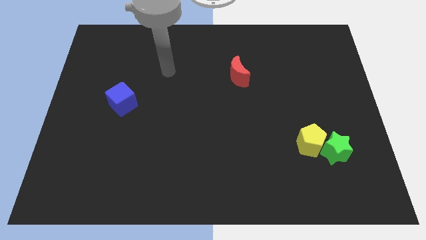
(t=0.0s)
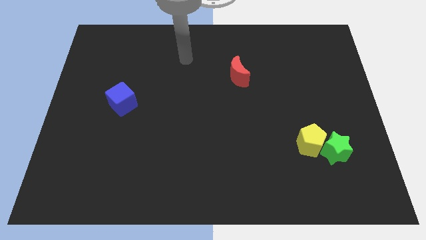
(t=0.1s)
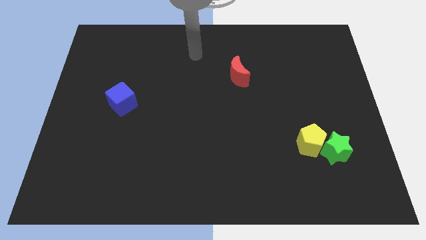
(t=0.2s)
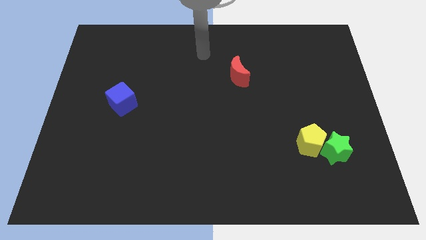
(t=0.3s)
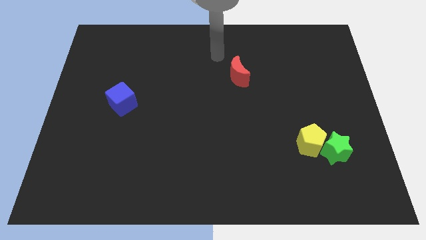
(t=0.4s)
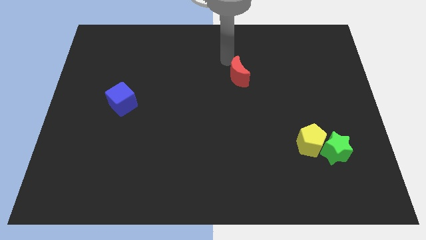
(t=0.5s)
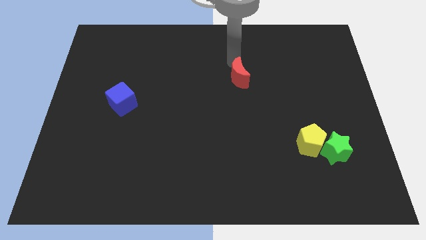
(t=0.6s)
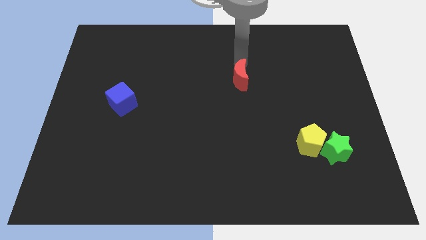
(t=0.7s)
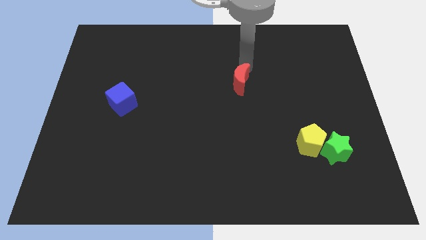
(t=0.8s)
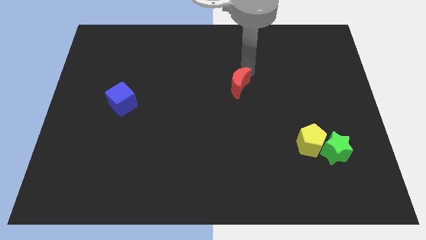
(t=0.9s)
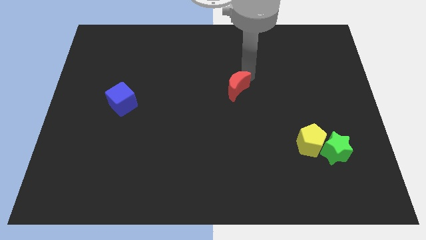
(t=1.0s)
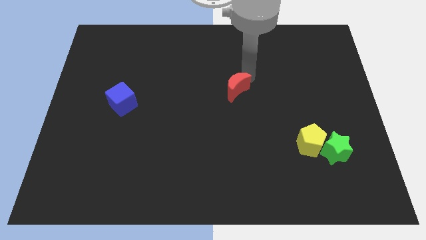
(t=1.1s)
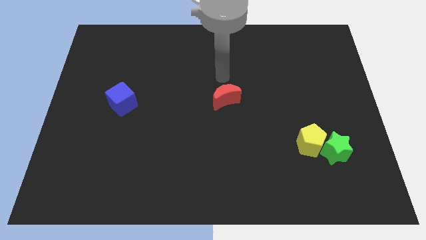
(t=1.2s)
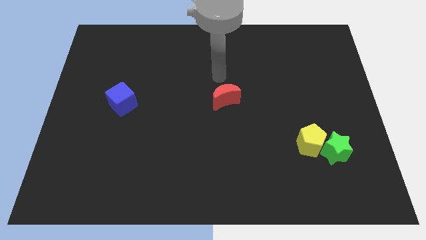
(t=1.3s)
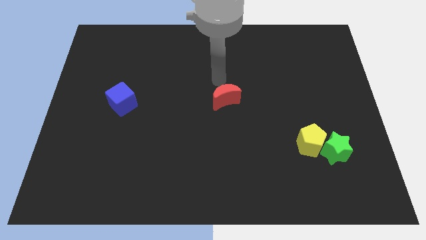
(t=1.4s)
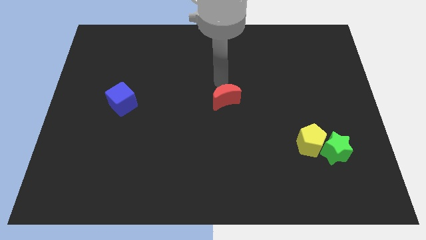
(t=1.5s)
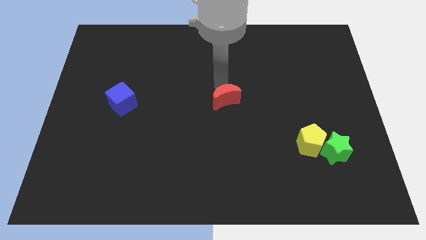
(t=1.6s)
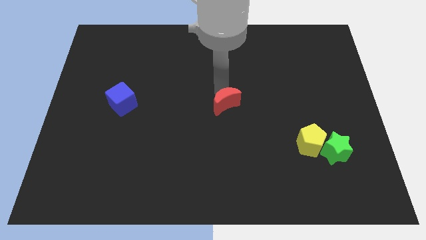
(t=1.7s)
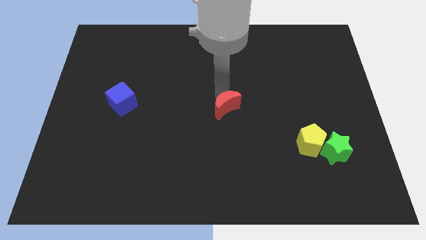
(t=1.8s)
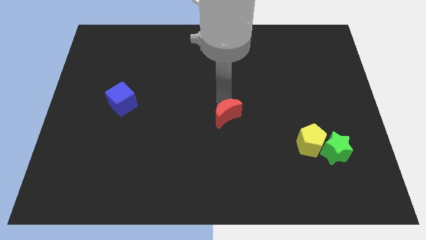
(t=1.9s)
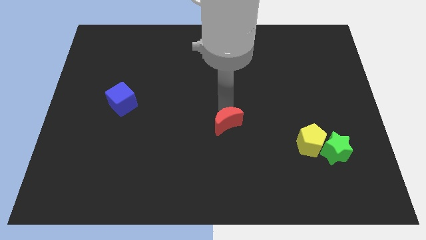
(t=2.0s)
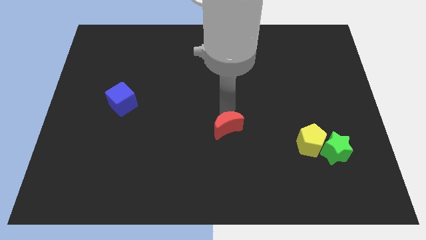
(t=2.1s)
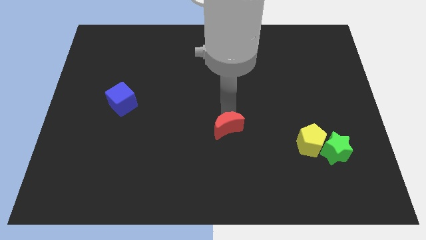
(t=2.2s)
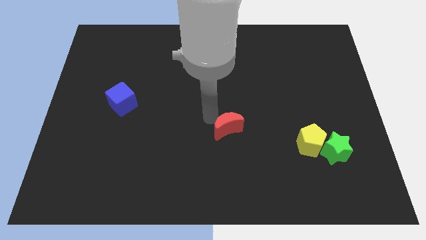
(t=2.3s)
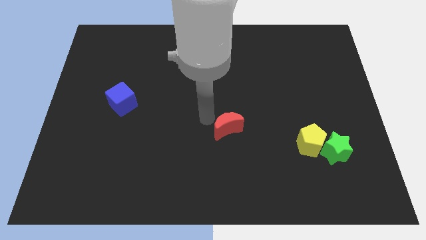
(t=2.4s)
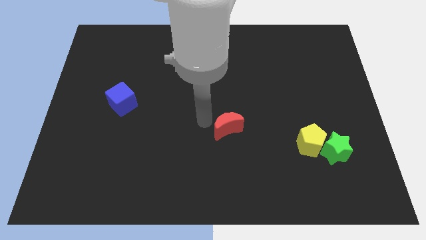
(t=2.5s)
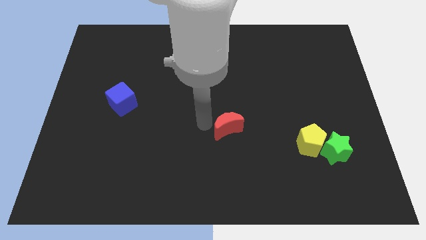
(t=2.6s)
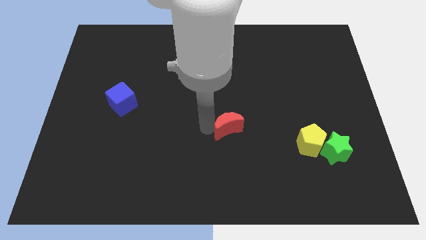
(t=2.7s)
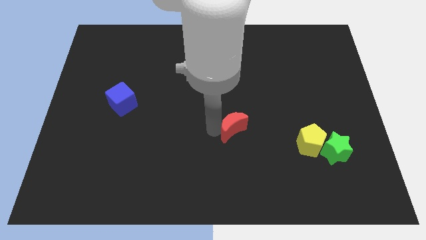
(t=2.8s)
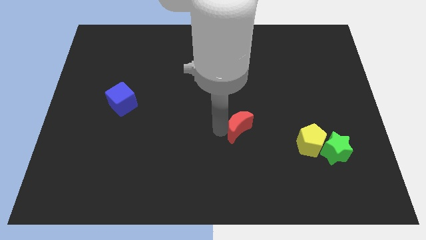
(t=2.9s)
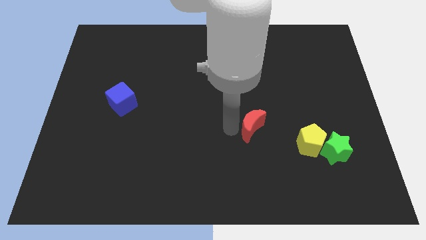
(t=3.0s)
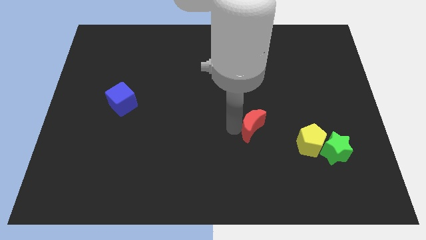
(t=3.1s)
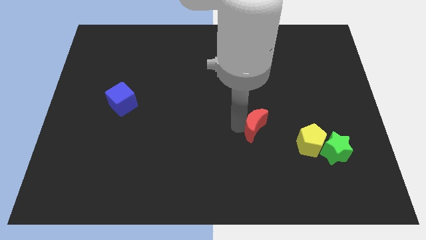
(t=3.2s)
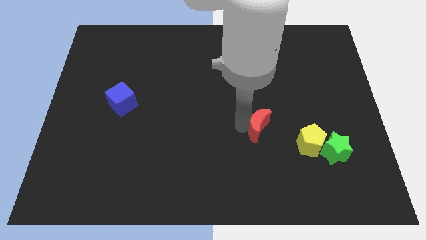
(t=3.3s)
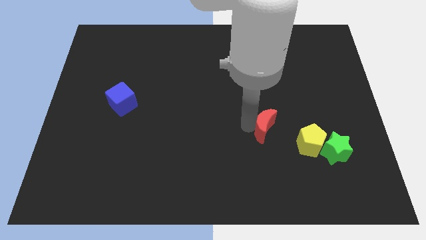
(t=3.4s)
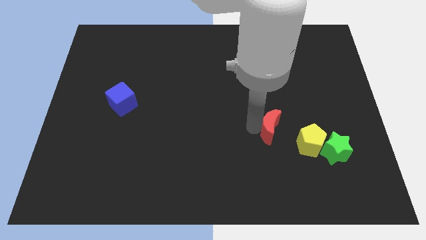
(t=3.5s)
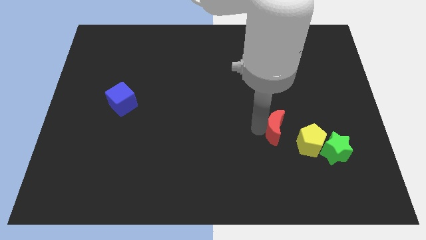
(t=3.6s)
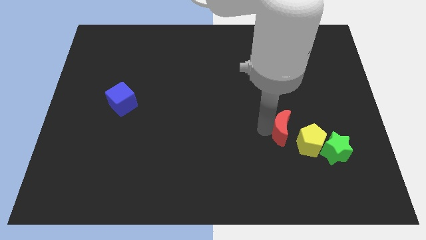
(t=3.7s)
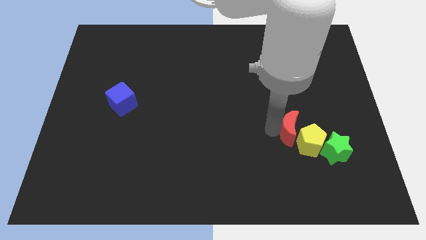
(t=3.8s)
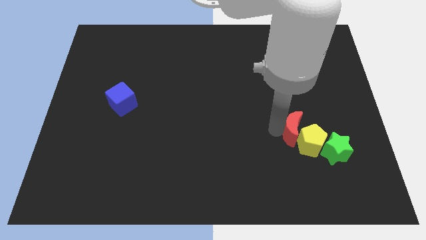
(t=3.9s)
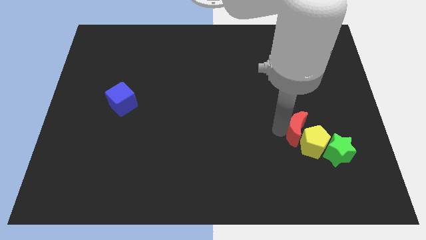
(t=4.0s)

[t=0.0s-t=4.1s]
push the red moon towards the pentagon

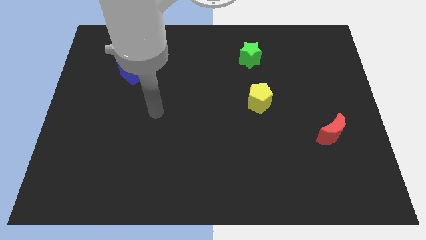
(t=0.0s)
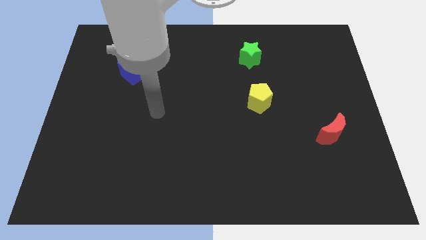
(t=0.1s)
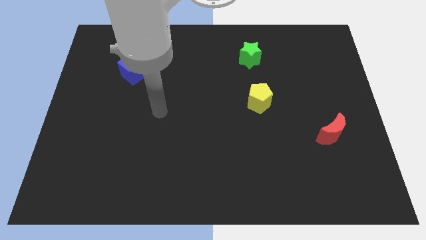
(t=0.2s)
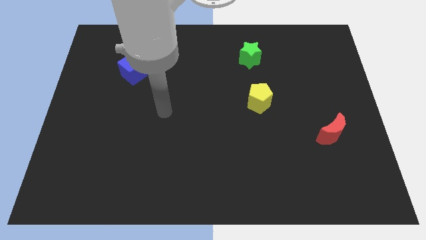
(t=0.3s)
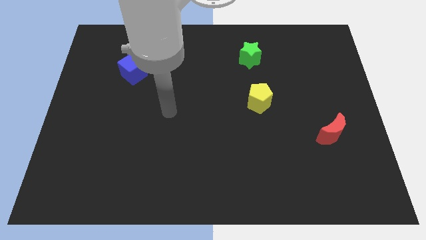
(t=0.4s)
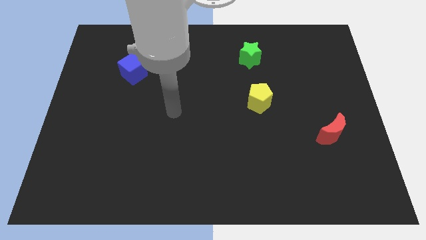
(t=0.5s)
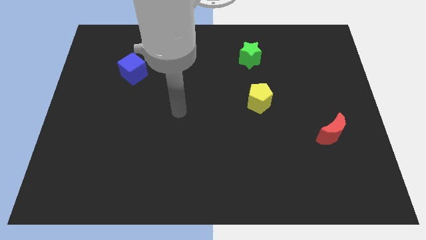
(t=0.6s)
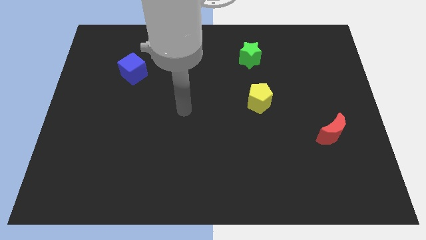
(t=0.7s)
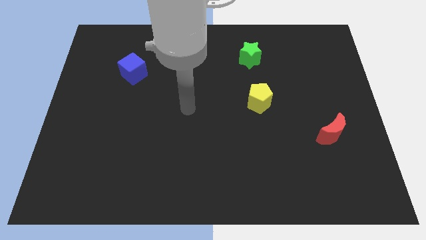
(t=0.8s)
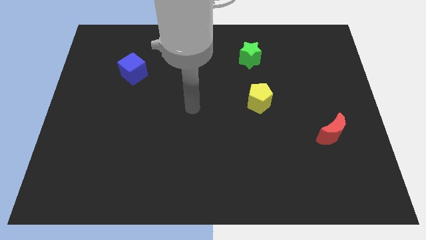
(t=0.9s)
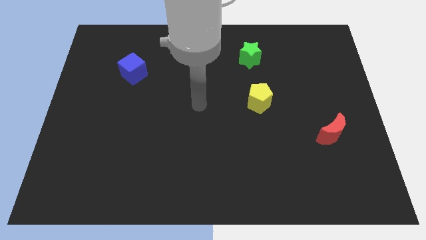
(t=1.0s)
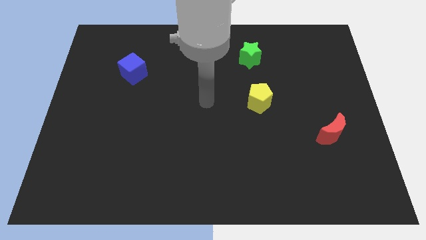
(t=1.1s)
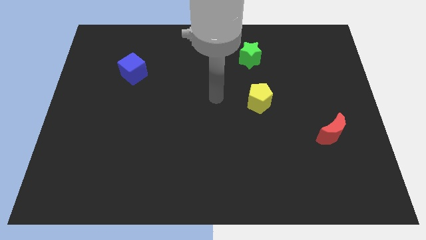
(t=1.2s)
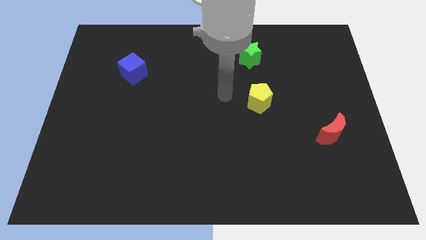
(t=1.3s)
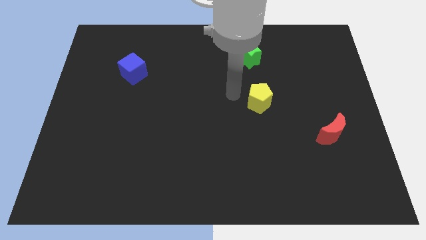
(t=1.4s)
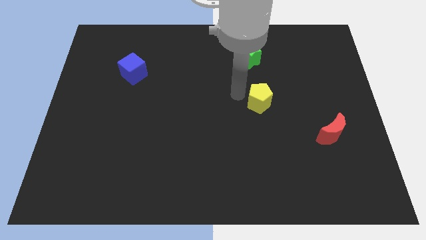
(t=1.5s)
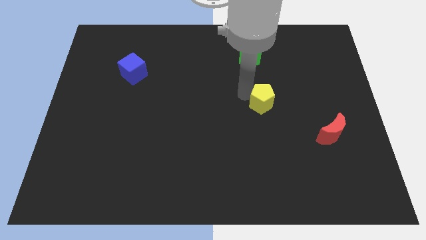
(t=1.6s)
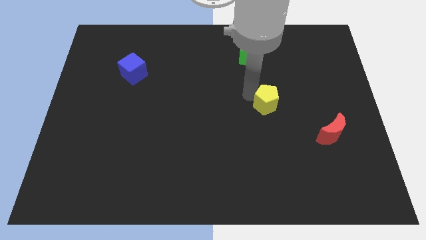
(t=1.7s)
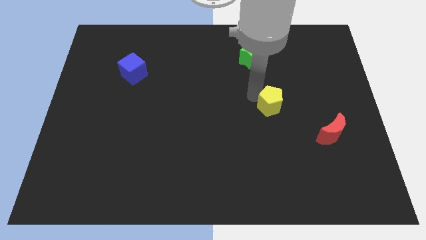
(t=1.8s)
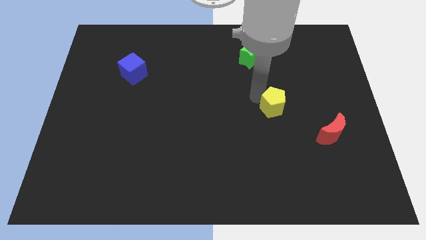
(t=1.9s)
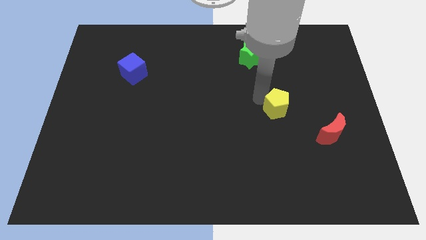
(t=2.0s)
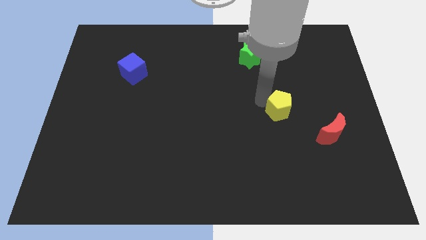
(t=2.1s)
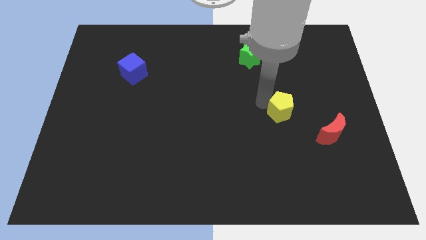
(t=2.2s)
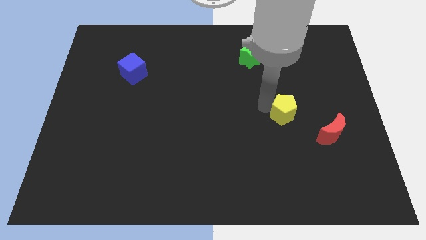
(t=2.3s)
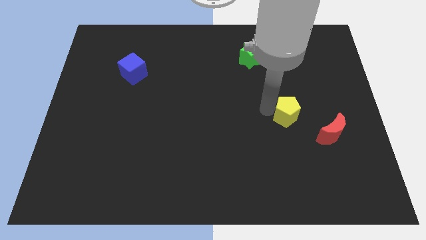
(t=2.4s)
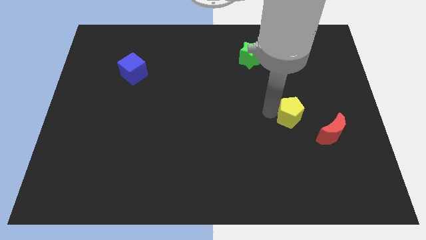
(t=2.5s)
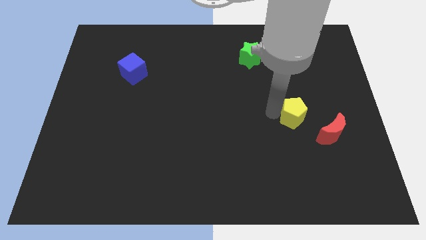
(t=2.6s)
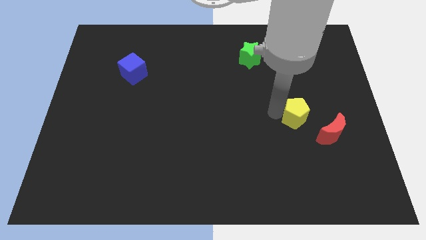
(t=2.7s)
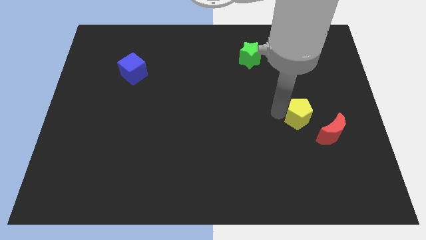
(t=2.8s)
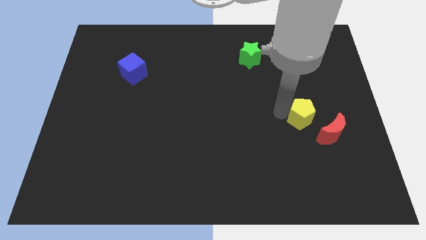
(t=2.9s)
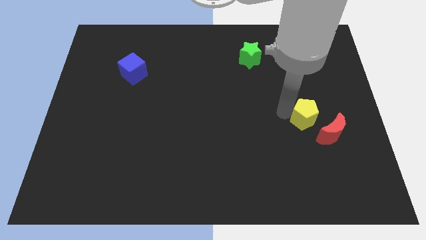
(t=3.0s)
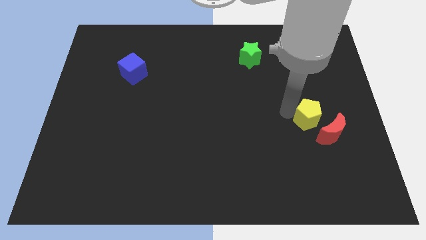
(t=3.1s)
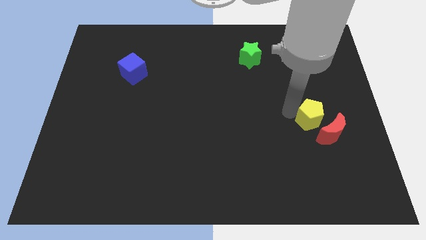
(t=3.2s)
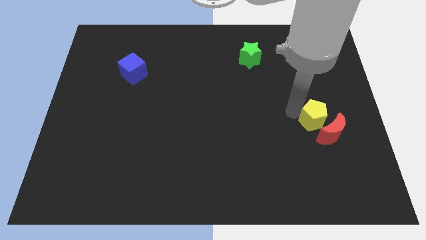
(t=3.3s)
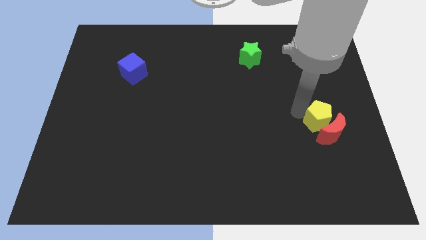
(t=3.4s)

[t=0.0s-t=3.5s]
move the yellow block to the red moon

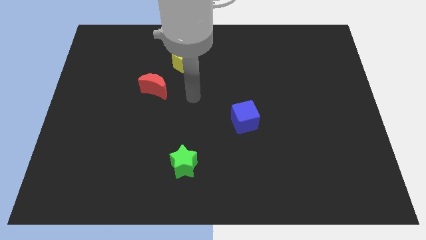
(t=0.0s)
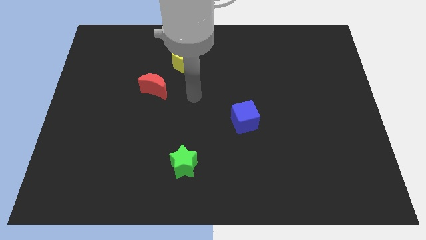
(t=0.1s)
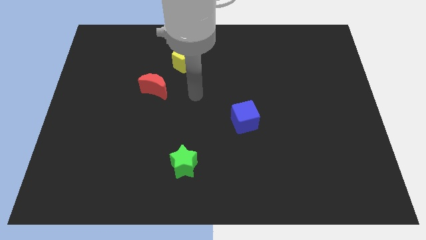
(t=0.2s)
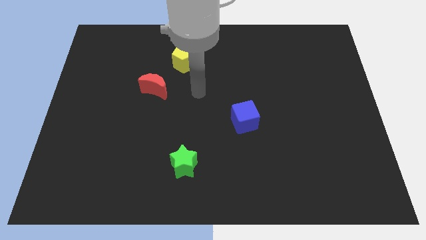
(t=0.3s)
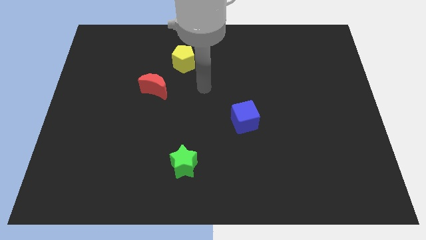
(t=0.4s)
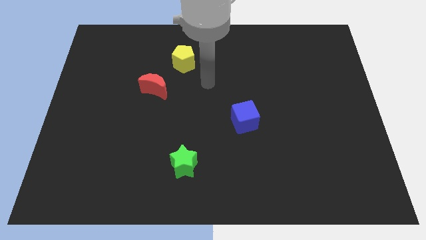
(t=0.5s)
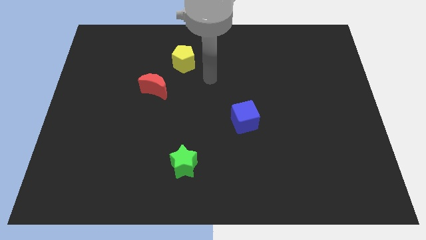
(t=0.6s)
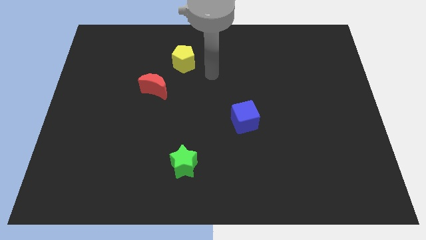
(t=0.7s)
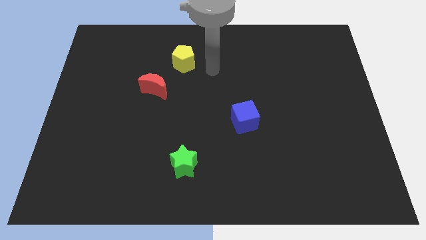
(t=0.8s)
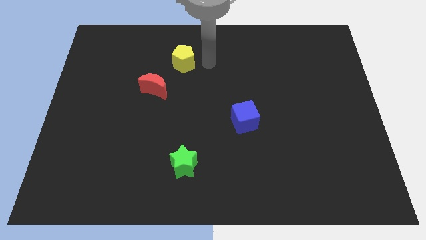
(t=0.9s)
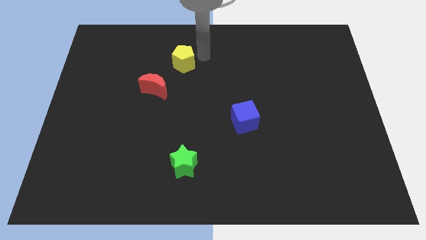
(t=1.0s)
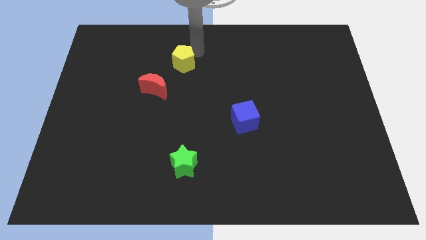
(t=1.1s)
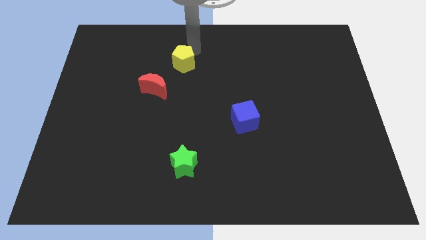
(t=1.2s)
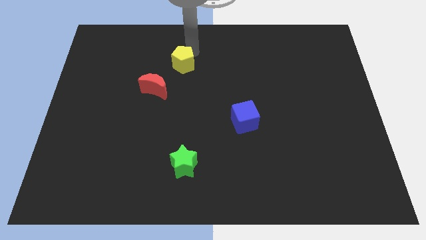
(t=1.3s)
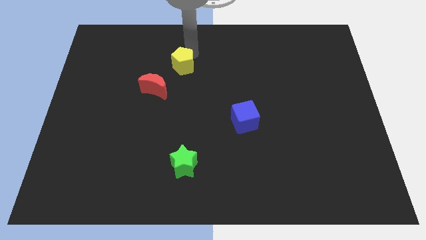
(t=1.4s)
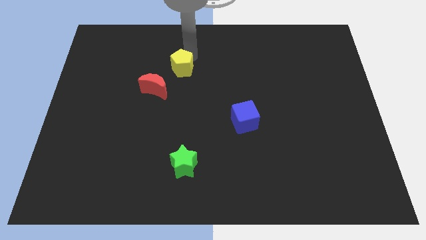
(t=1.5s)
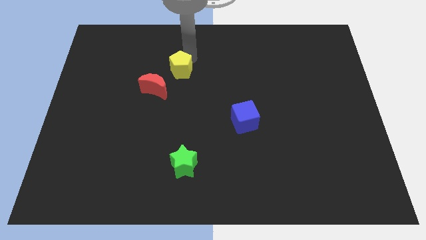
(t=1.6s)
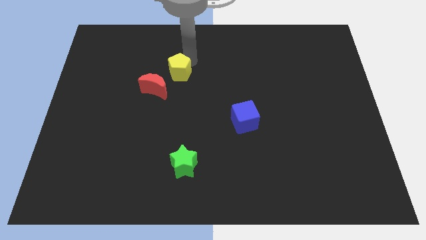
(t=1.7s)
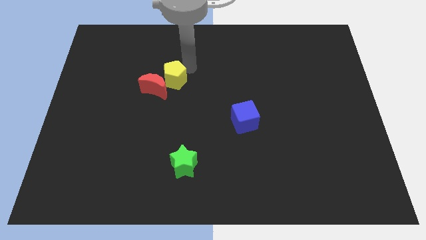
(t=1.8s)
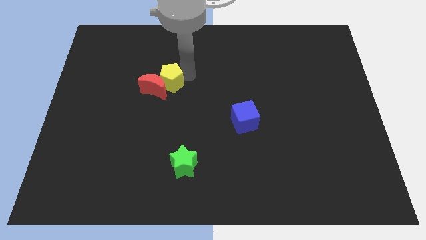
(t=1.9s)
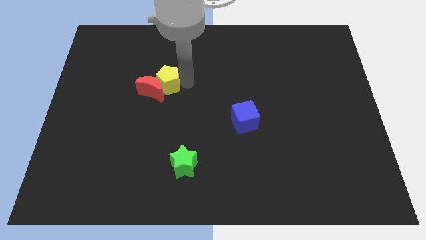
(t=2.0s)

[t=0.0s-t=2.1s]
push the pentagon to the red block
